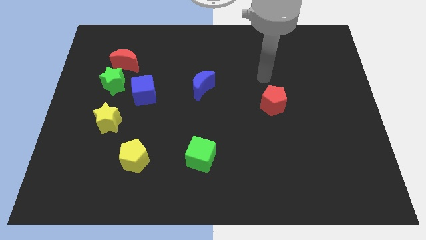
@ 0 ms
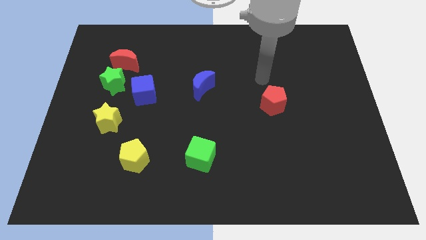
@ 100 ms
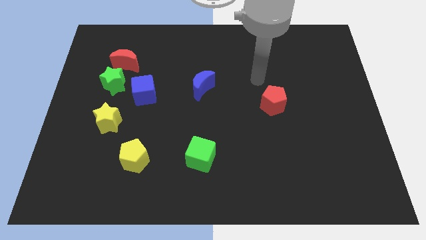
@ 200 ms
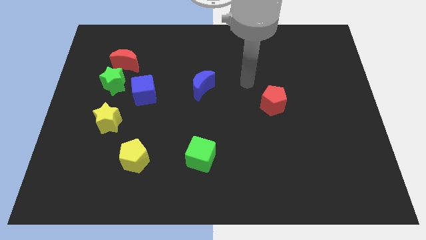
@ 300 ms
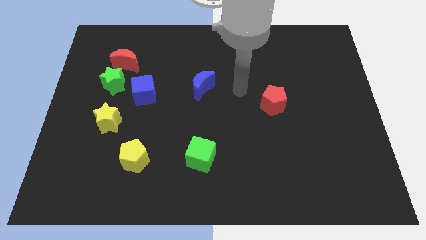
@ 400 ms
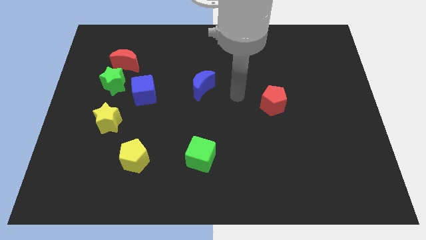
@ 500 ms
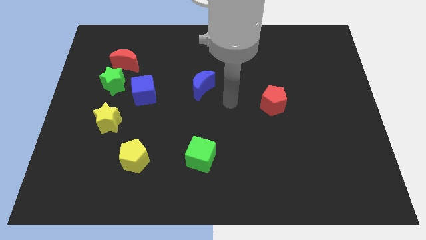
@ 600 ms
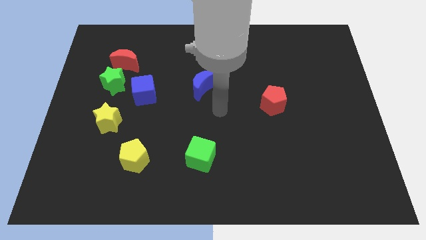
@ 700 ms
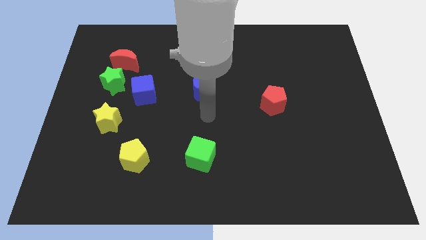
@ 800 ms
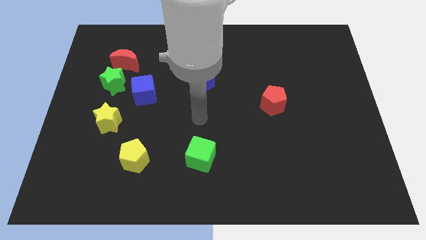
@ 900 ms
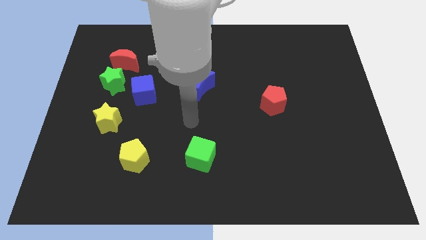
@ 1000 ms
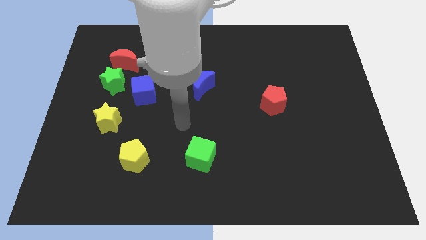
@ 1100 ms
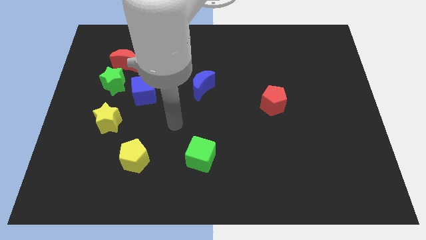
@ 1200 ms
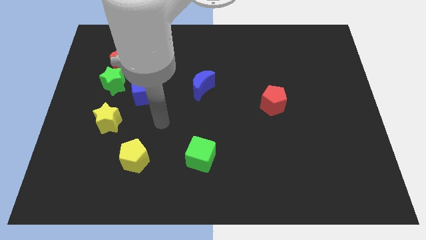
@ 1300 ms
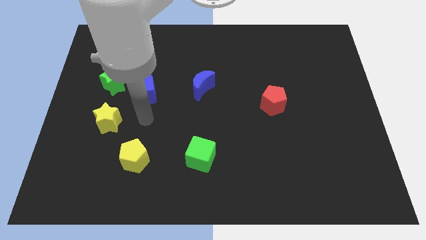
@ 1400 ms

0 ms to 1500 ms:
place your arm diagonally in between the blue moon and yellow pentagon

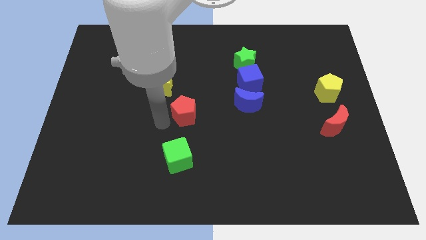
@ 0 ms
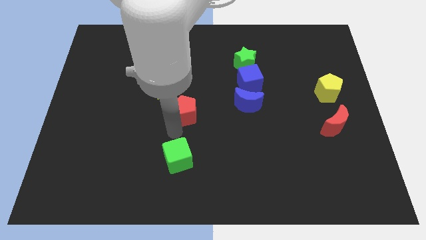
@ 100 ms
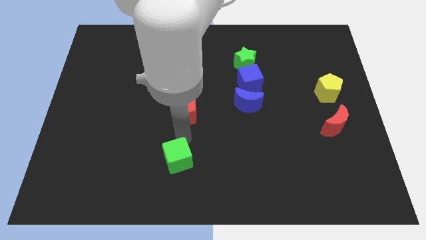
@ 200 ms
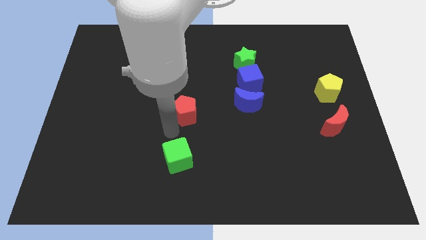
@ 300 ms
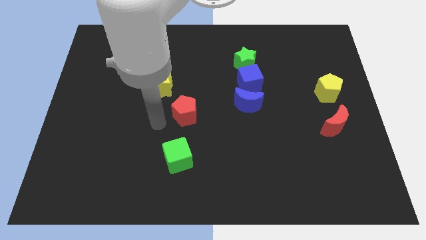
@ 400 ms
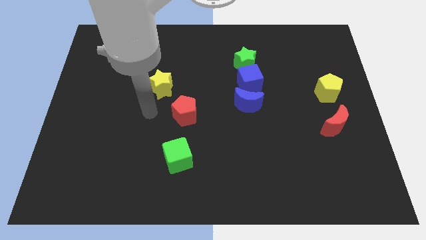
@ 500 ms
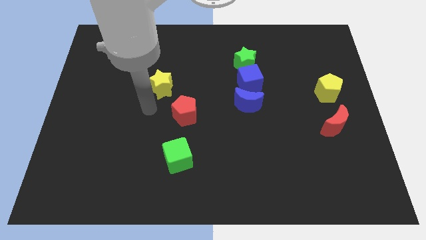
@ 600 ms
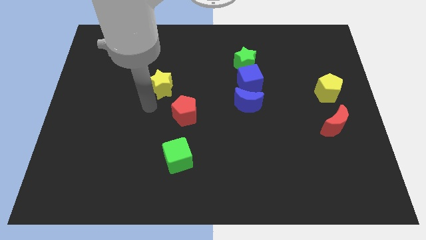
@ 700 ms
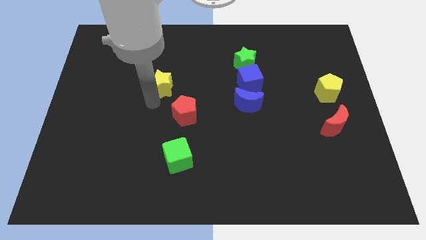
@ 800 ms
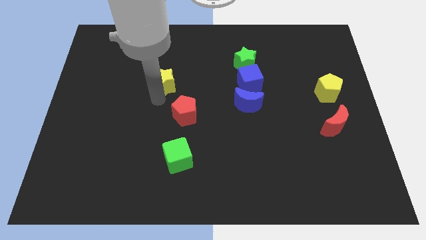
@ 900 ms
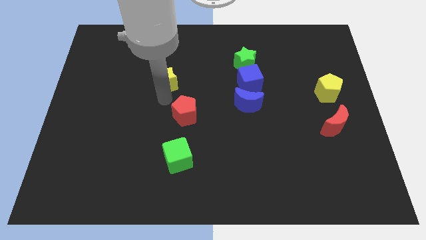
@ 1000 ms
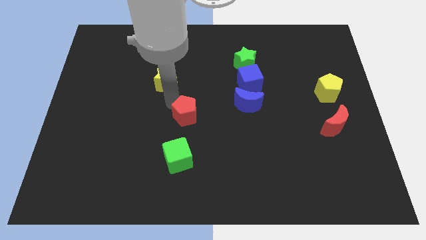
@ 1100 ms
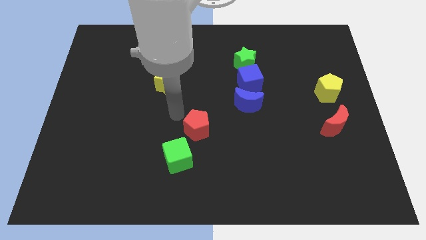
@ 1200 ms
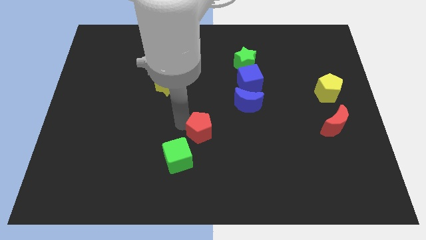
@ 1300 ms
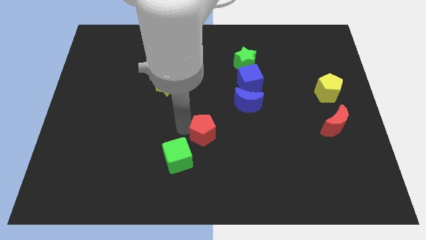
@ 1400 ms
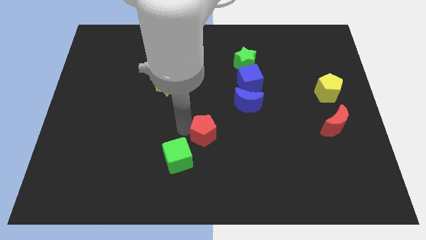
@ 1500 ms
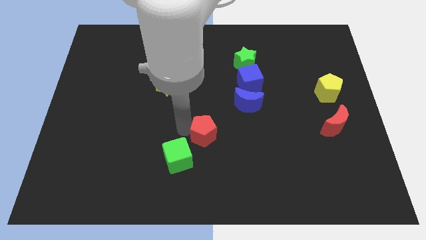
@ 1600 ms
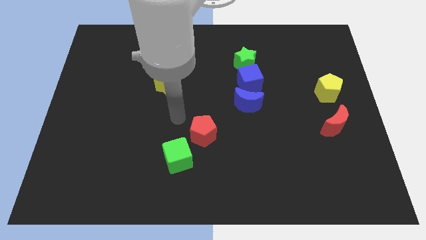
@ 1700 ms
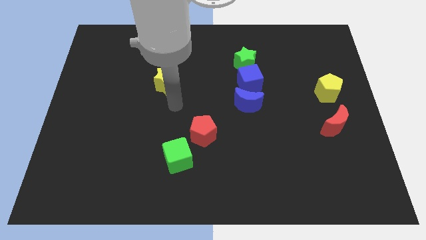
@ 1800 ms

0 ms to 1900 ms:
push the red pentagon towards the green cube

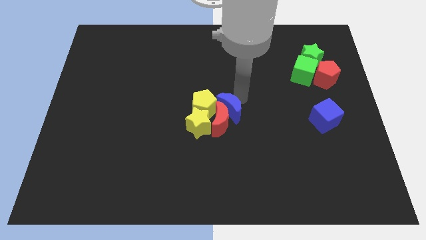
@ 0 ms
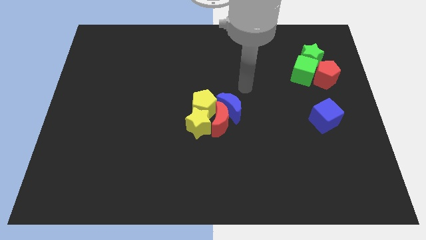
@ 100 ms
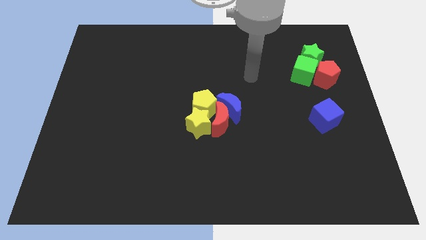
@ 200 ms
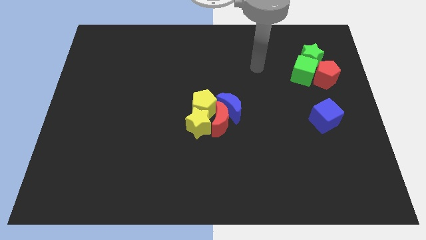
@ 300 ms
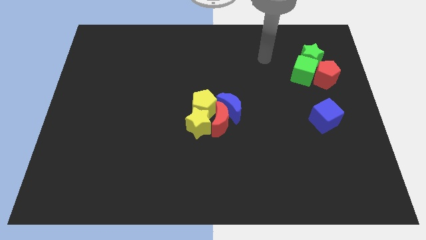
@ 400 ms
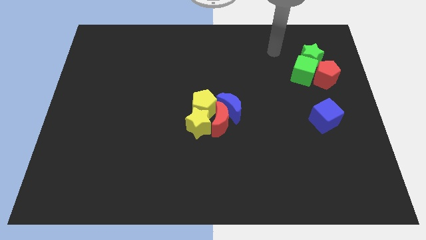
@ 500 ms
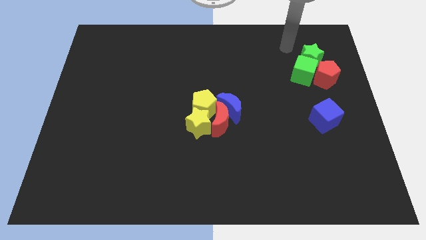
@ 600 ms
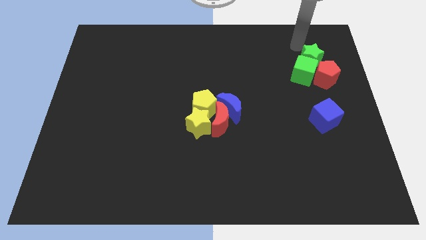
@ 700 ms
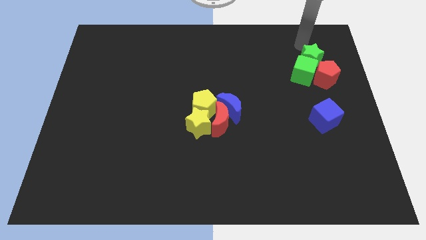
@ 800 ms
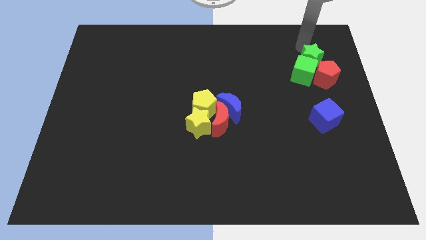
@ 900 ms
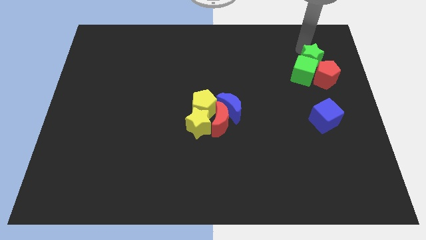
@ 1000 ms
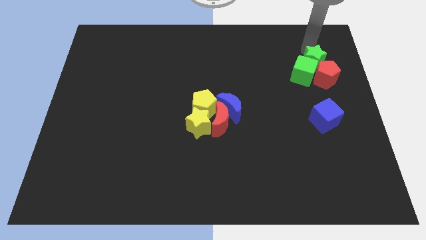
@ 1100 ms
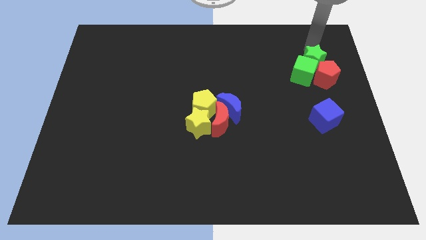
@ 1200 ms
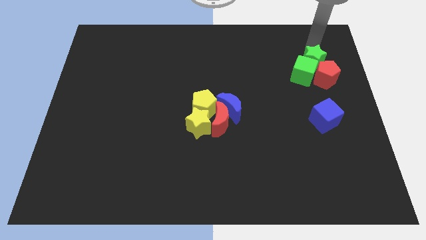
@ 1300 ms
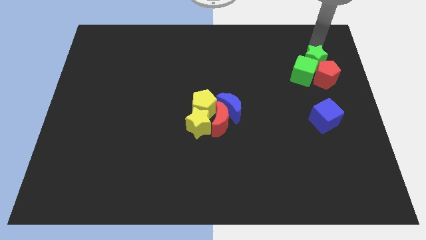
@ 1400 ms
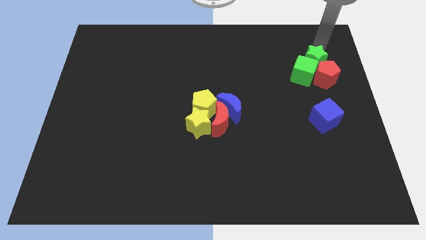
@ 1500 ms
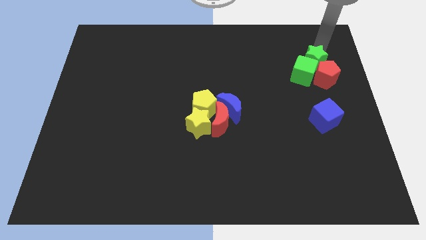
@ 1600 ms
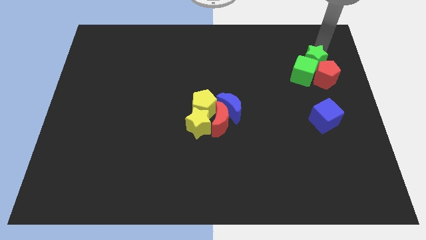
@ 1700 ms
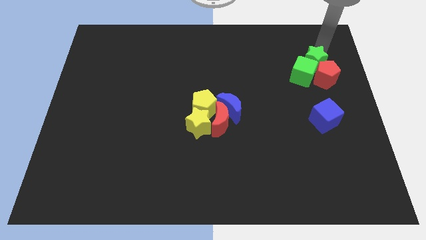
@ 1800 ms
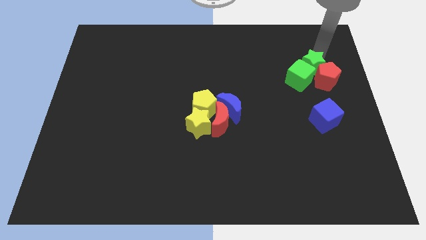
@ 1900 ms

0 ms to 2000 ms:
move the arm towards the green star

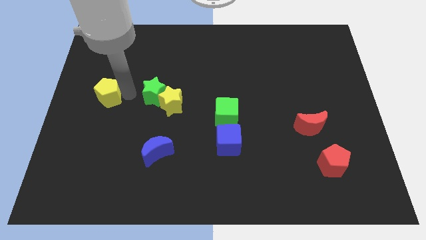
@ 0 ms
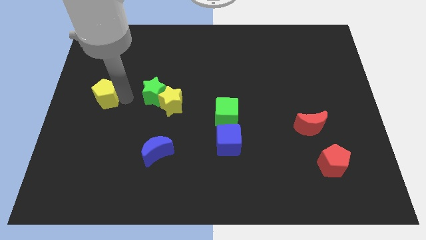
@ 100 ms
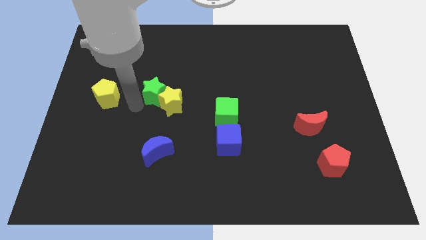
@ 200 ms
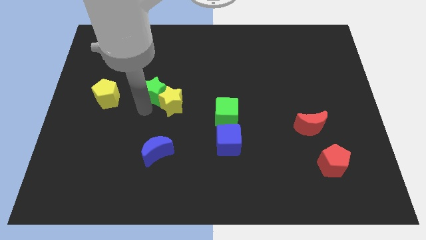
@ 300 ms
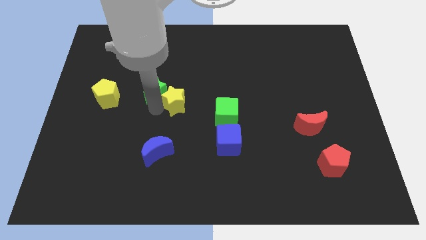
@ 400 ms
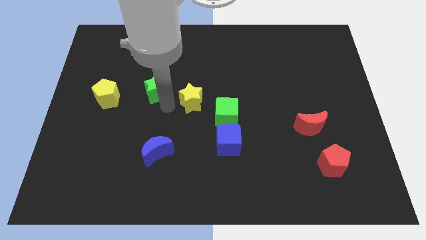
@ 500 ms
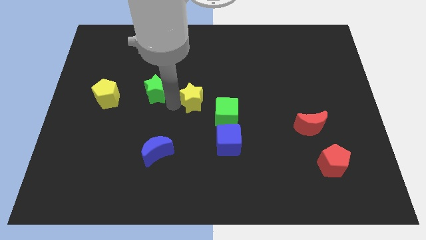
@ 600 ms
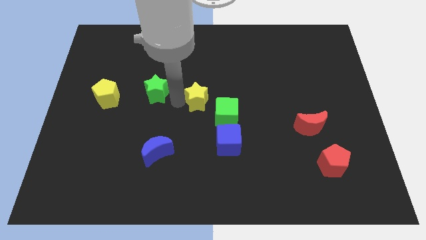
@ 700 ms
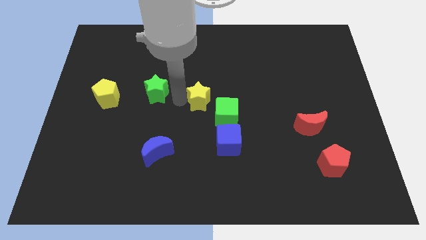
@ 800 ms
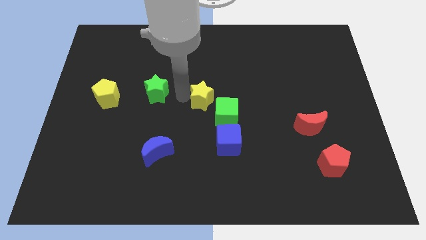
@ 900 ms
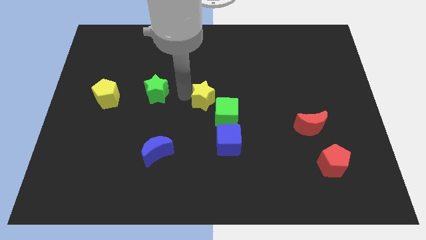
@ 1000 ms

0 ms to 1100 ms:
seperate green star and yellow star

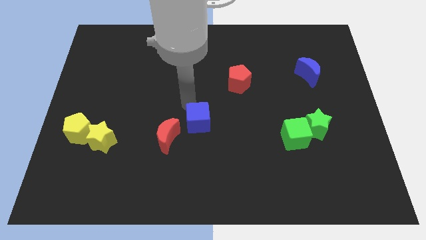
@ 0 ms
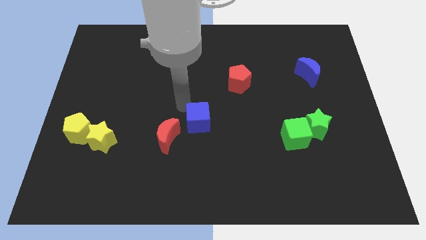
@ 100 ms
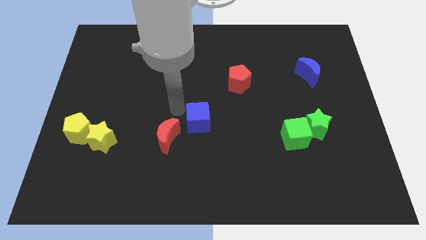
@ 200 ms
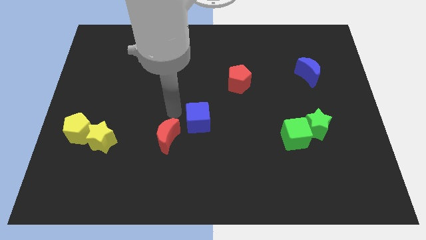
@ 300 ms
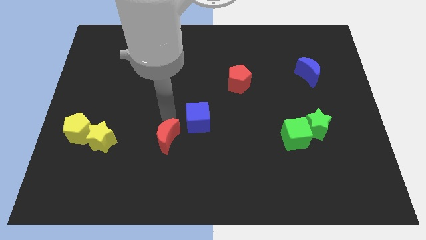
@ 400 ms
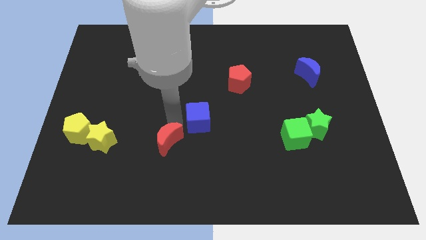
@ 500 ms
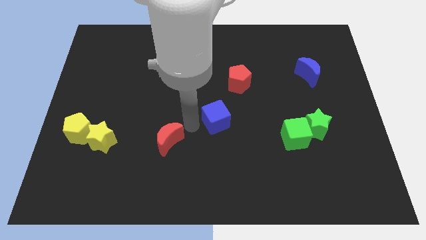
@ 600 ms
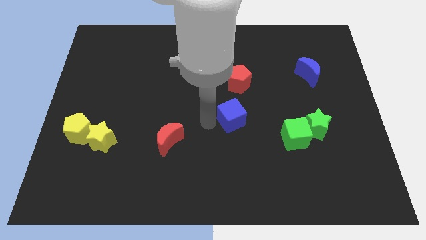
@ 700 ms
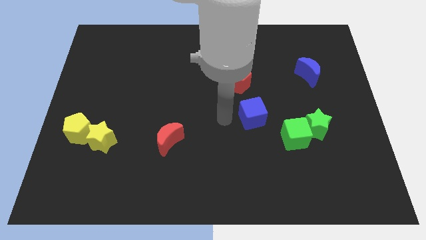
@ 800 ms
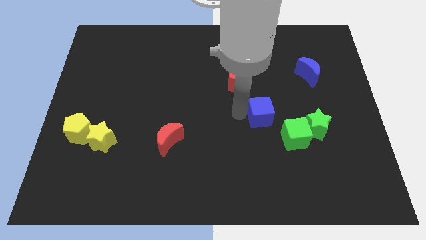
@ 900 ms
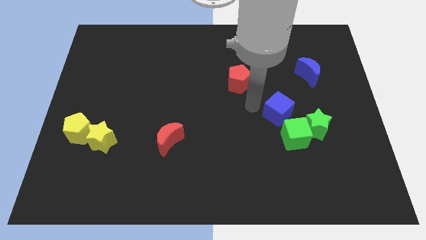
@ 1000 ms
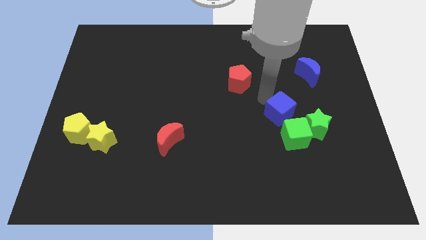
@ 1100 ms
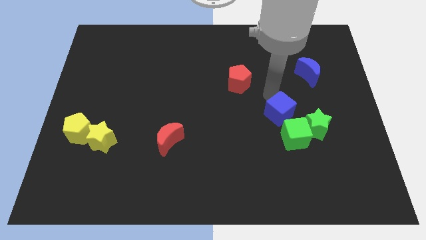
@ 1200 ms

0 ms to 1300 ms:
place the blue cube on top of the green cube

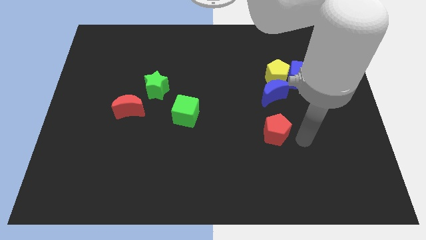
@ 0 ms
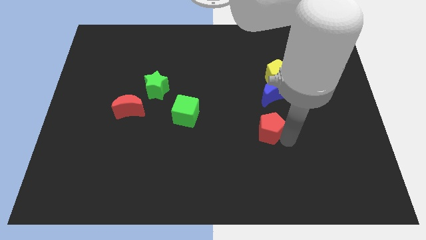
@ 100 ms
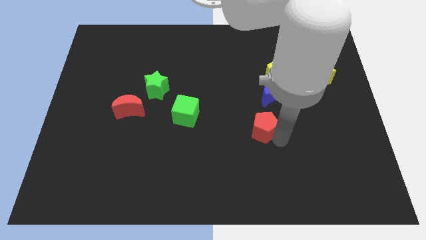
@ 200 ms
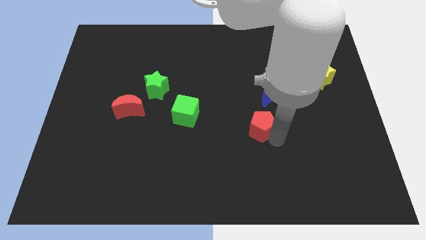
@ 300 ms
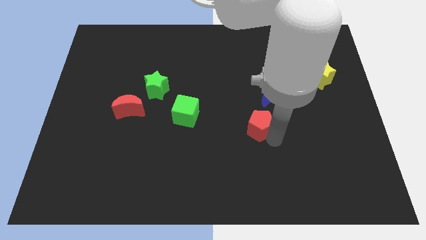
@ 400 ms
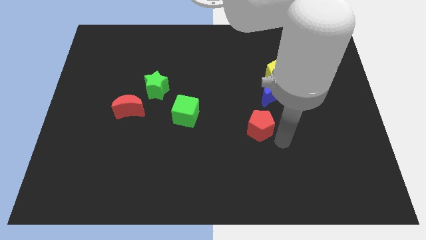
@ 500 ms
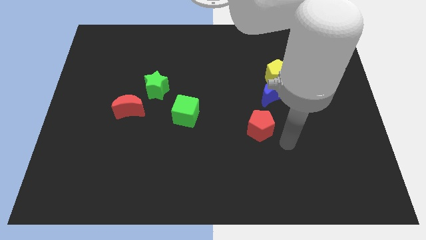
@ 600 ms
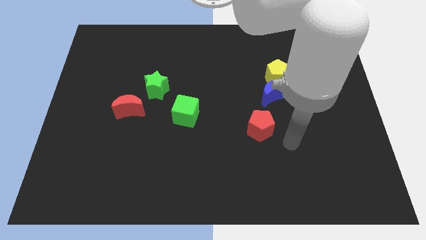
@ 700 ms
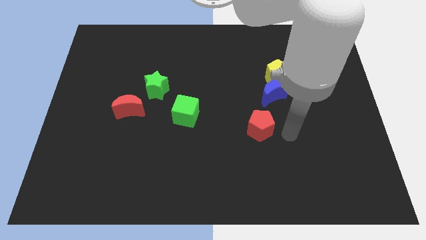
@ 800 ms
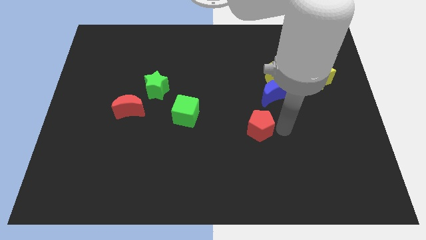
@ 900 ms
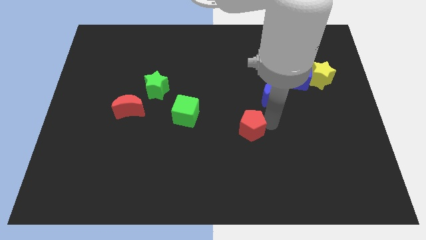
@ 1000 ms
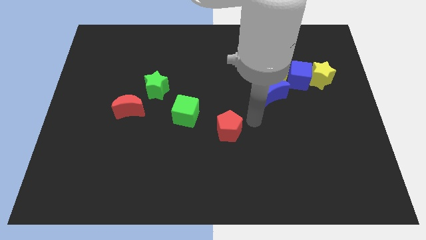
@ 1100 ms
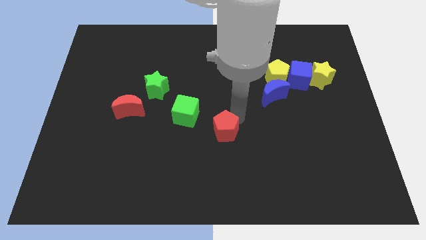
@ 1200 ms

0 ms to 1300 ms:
push the red pentagon to the center of the board
